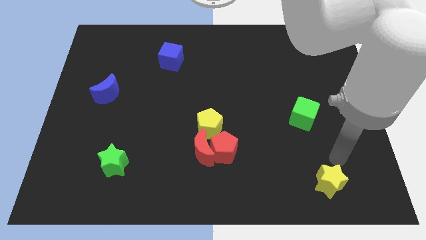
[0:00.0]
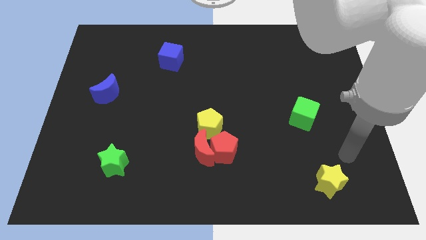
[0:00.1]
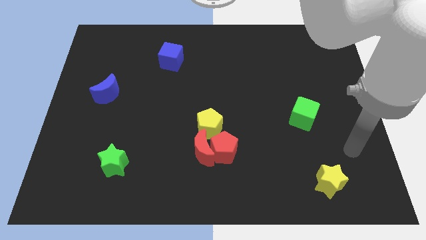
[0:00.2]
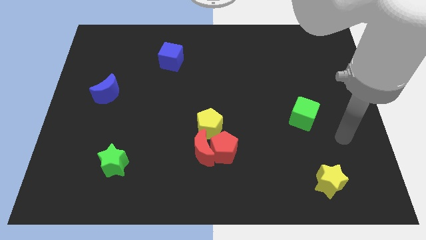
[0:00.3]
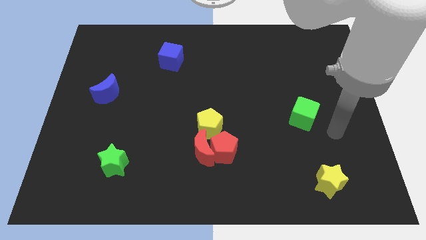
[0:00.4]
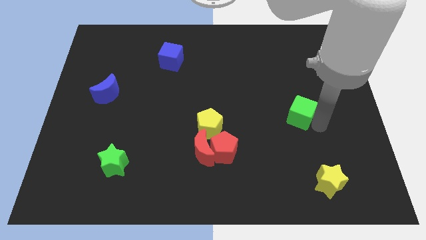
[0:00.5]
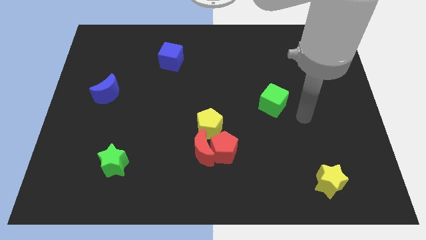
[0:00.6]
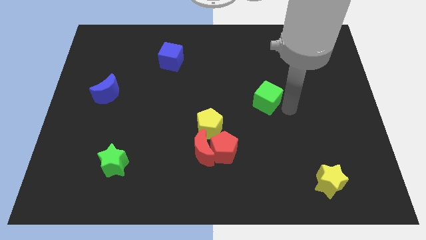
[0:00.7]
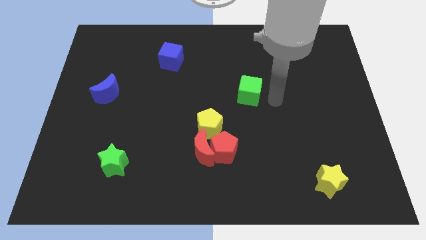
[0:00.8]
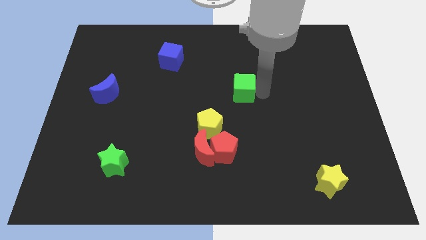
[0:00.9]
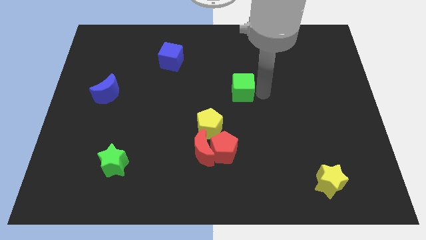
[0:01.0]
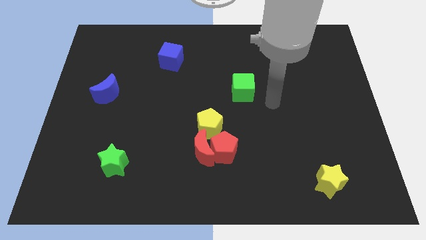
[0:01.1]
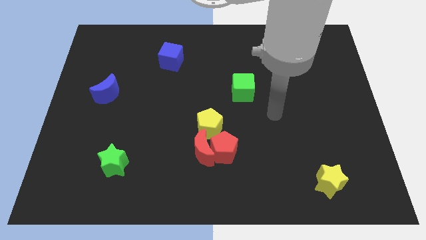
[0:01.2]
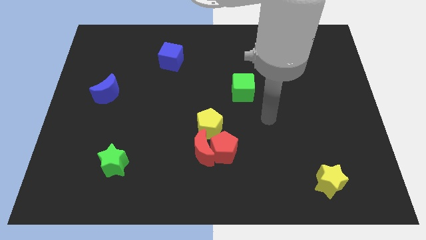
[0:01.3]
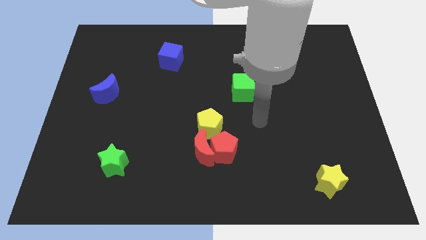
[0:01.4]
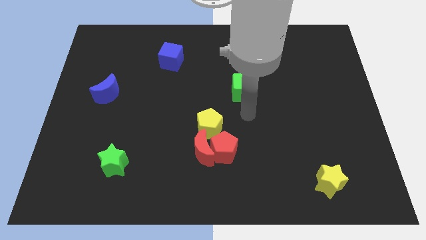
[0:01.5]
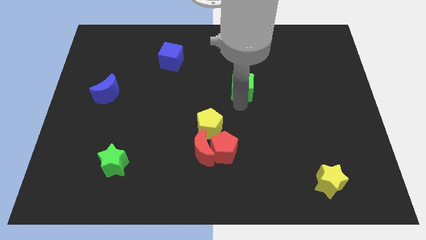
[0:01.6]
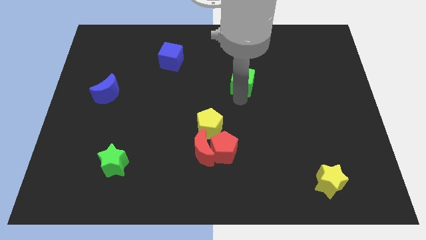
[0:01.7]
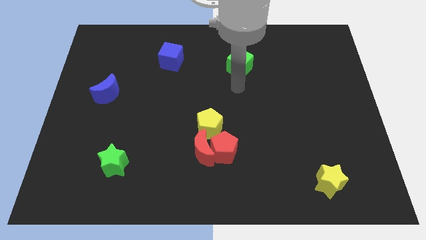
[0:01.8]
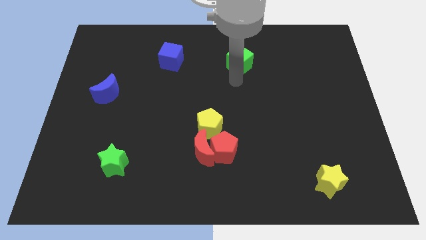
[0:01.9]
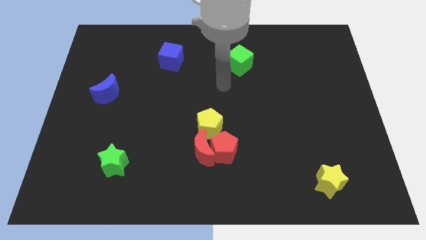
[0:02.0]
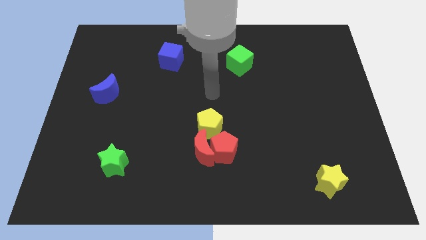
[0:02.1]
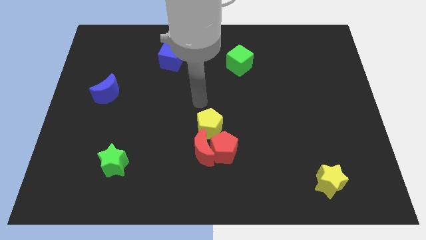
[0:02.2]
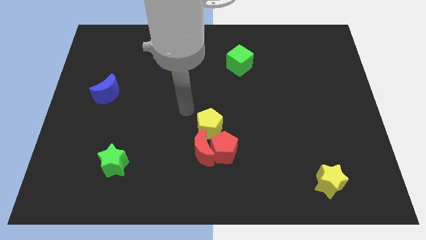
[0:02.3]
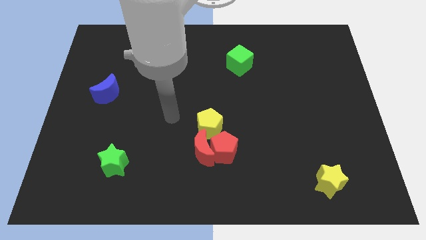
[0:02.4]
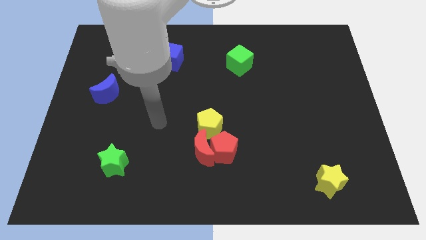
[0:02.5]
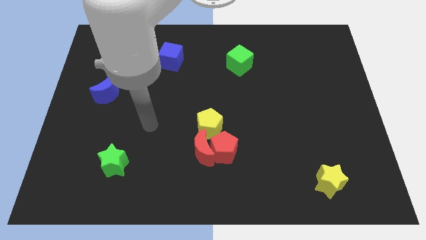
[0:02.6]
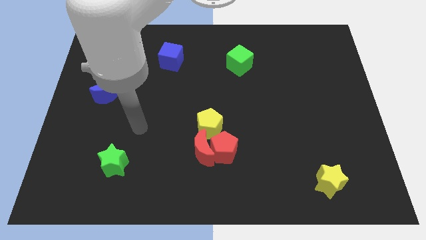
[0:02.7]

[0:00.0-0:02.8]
move green cube parallel right to blue cube

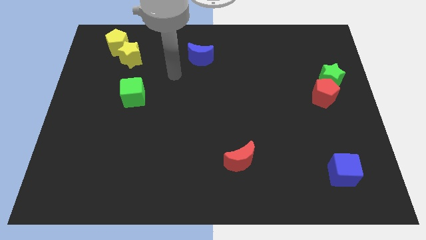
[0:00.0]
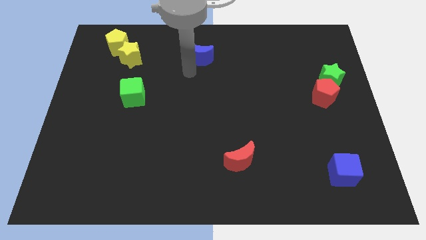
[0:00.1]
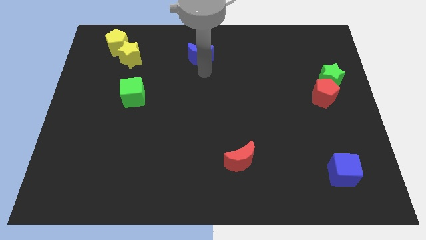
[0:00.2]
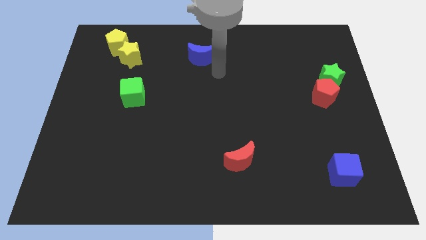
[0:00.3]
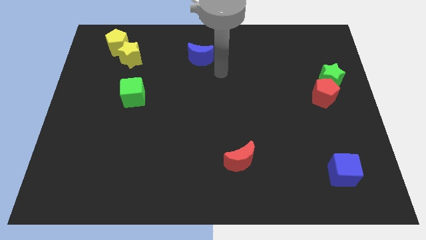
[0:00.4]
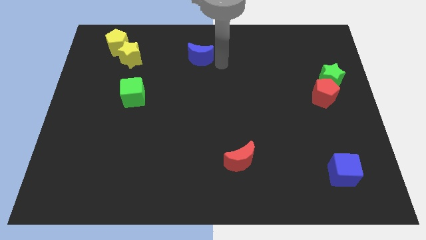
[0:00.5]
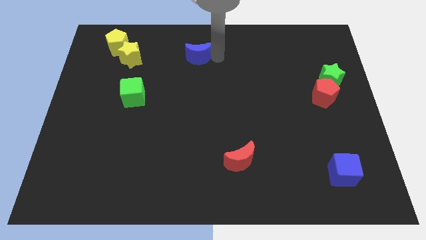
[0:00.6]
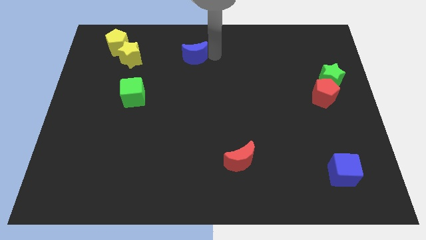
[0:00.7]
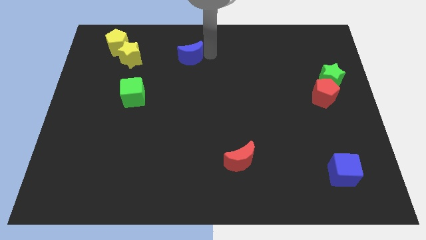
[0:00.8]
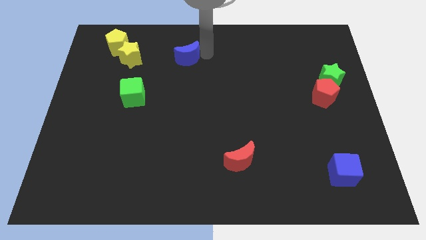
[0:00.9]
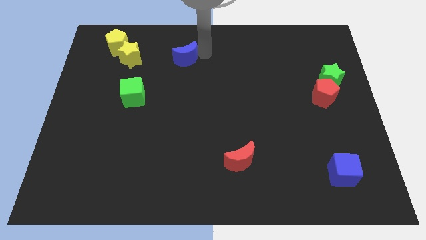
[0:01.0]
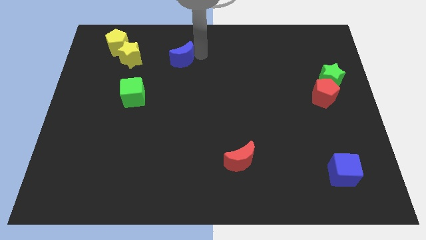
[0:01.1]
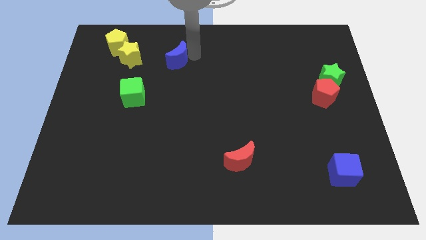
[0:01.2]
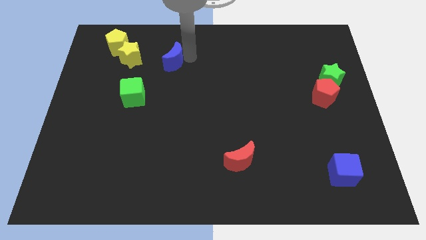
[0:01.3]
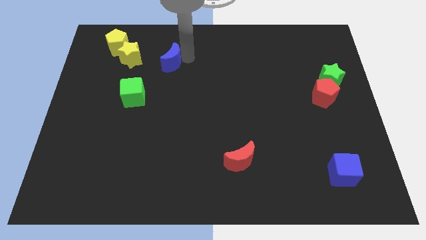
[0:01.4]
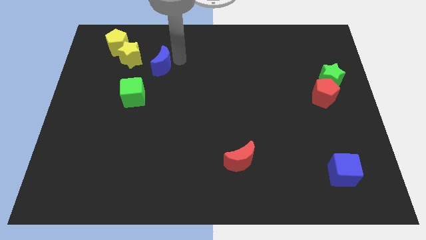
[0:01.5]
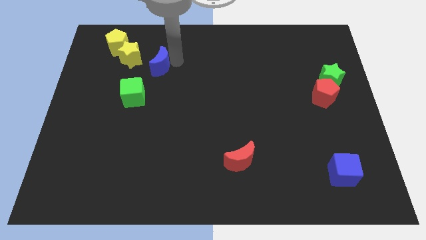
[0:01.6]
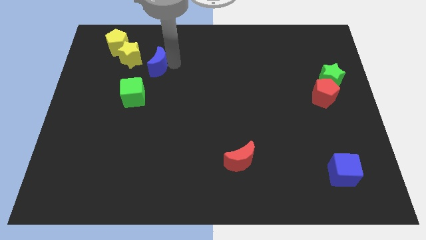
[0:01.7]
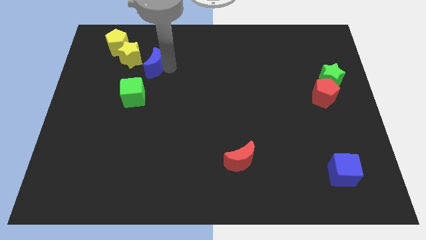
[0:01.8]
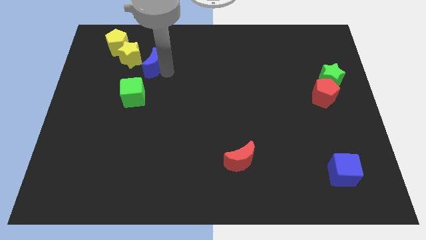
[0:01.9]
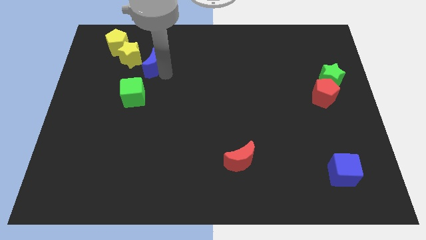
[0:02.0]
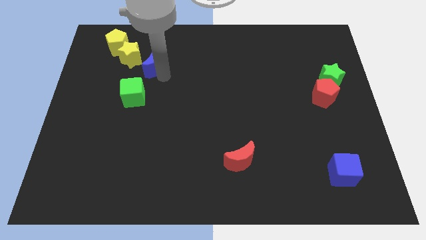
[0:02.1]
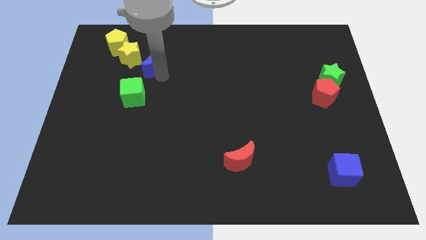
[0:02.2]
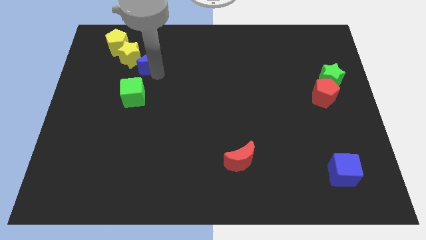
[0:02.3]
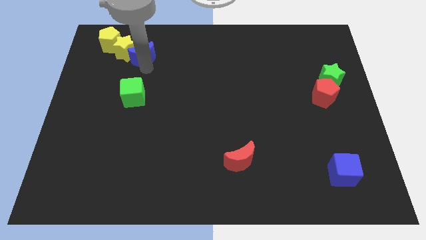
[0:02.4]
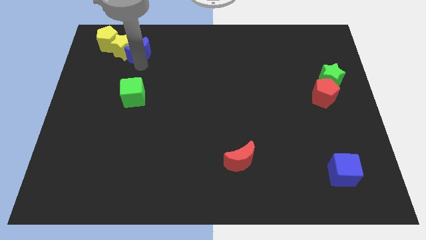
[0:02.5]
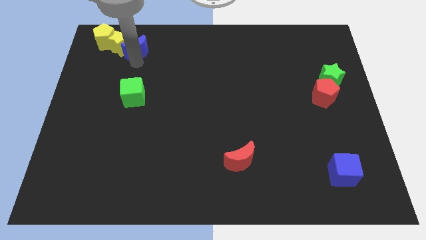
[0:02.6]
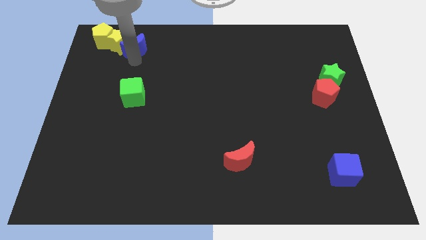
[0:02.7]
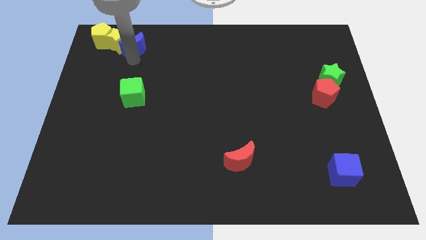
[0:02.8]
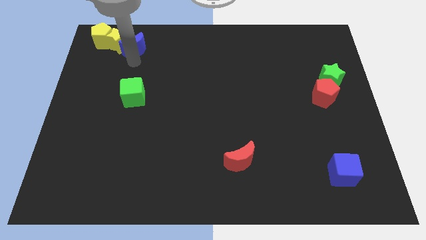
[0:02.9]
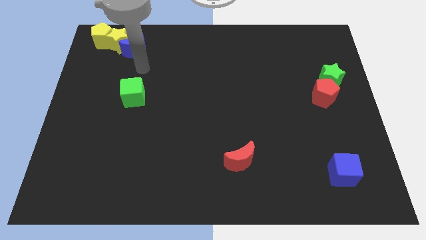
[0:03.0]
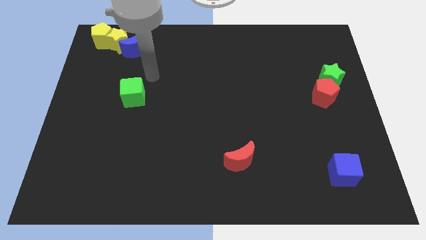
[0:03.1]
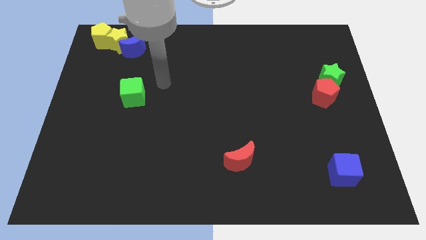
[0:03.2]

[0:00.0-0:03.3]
place blue crescent near yellow star

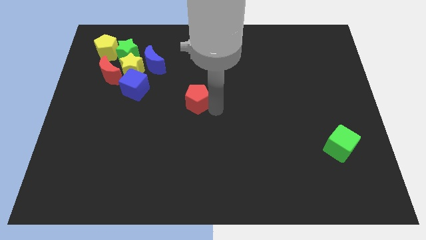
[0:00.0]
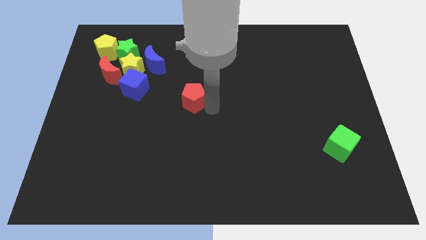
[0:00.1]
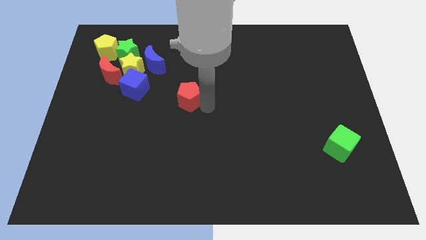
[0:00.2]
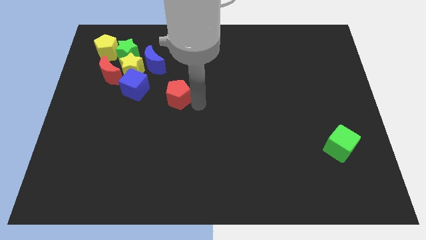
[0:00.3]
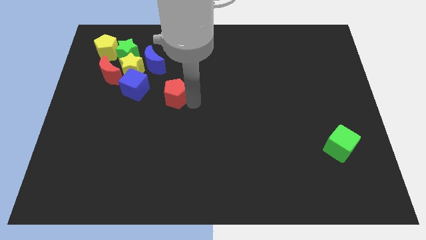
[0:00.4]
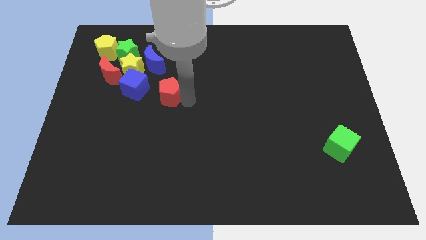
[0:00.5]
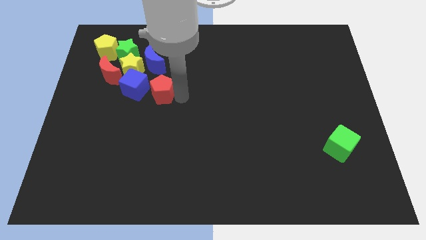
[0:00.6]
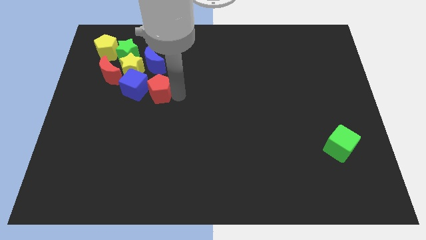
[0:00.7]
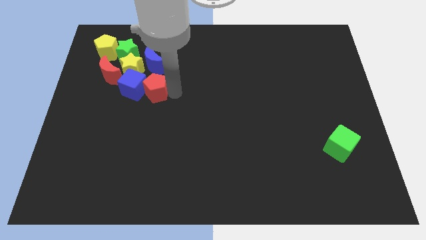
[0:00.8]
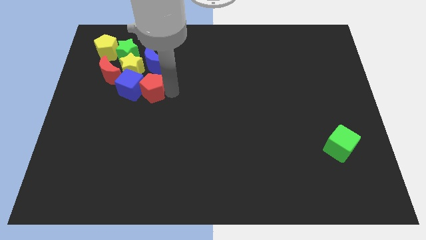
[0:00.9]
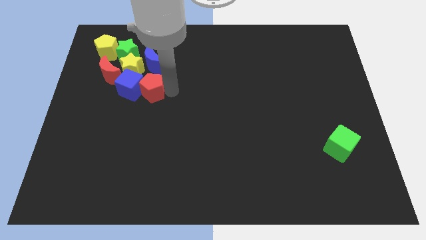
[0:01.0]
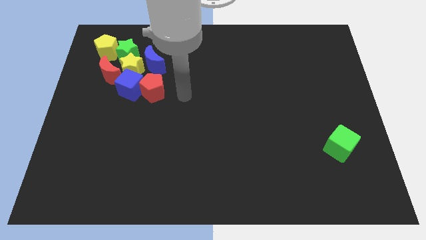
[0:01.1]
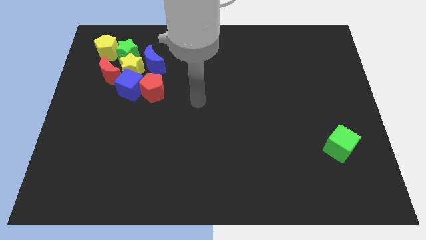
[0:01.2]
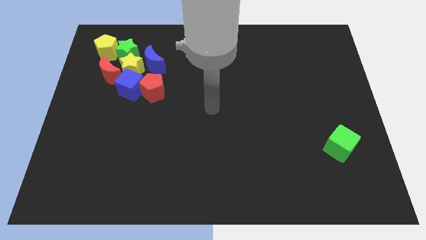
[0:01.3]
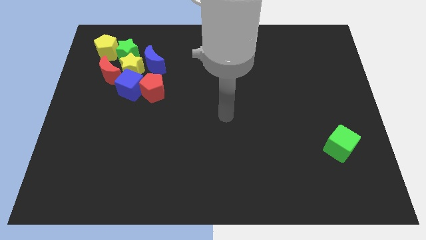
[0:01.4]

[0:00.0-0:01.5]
push the red pentagon into the blue cube

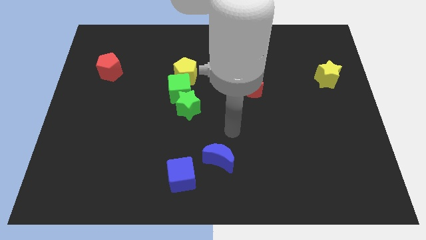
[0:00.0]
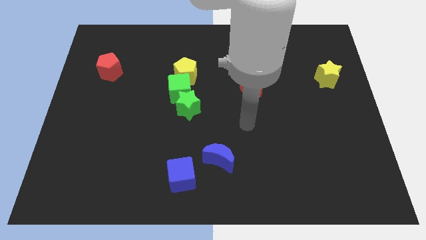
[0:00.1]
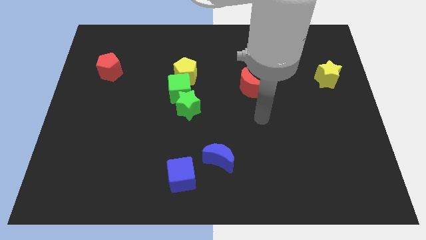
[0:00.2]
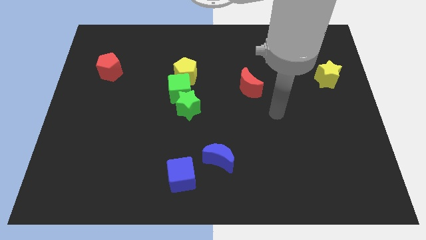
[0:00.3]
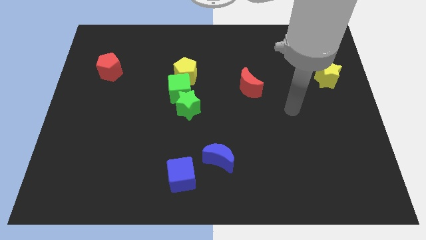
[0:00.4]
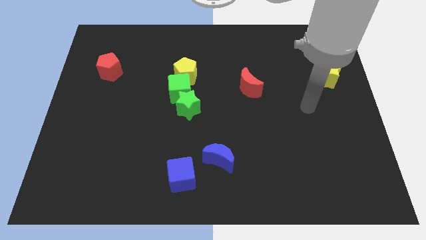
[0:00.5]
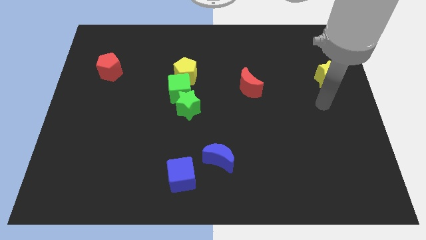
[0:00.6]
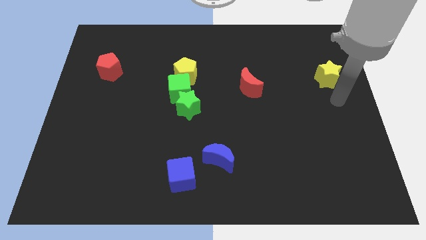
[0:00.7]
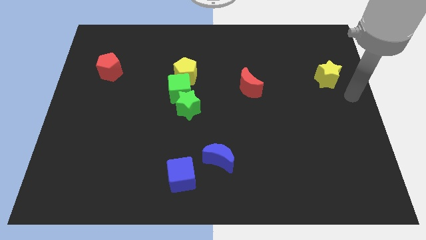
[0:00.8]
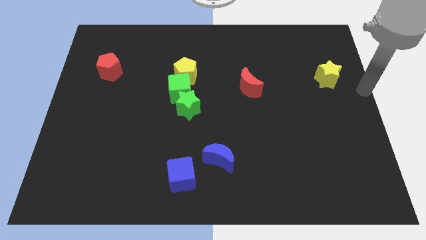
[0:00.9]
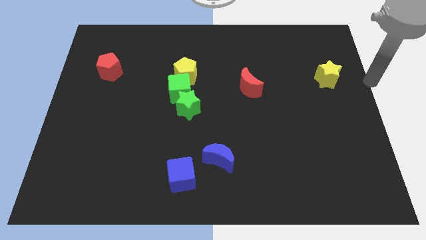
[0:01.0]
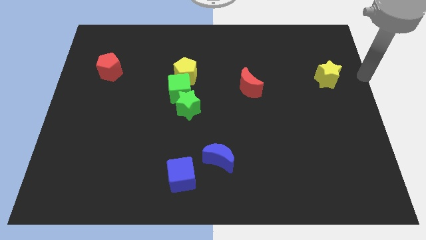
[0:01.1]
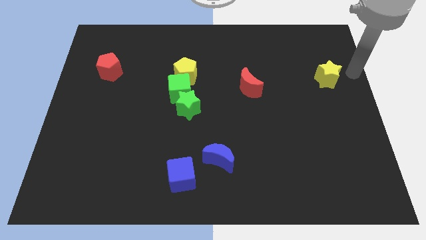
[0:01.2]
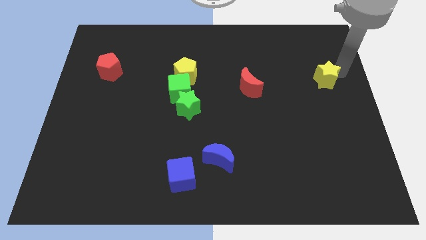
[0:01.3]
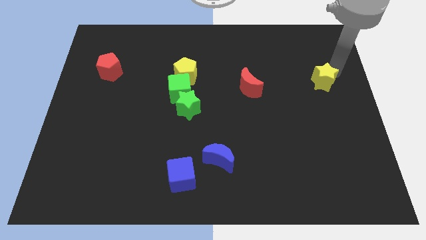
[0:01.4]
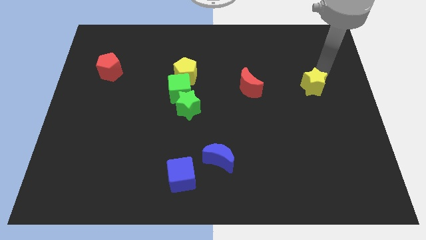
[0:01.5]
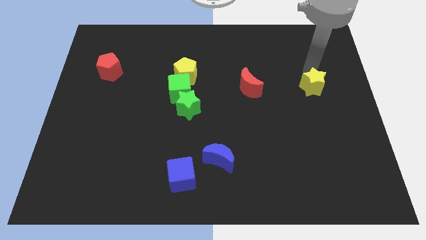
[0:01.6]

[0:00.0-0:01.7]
move the yellow star towards the red moon
